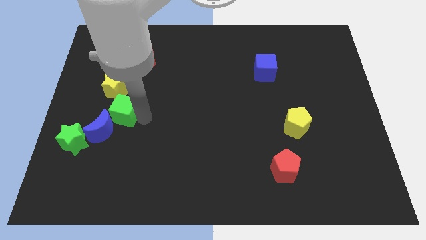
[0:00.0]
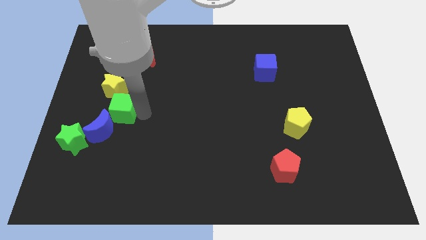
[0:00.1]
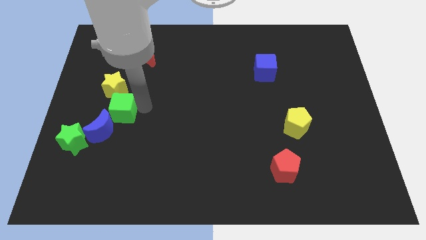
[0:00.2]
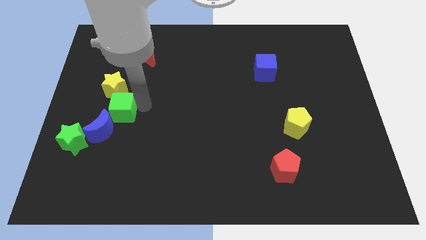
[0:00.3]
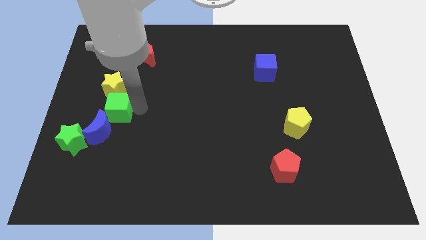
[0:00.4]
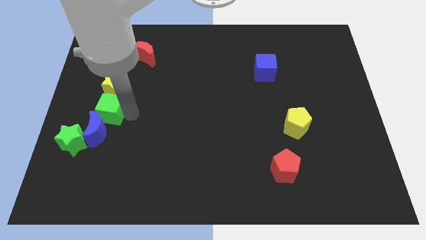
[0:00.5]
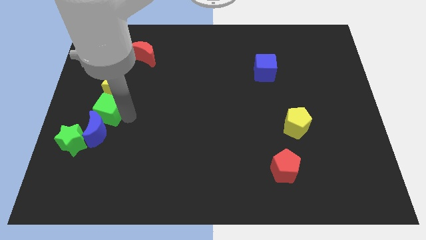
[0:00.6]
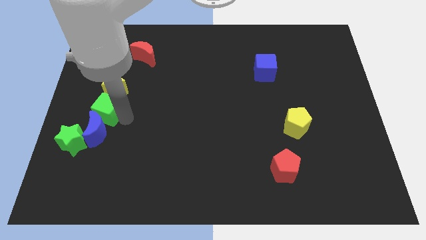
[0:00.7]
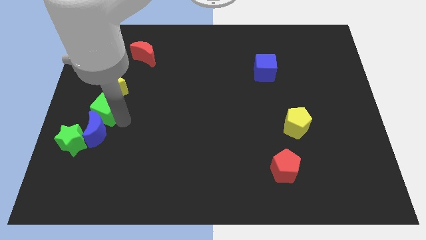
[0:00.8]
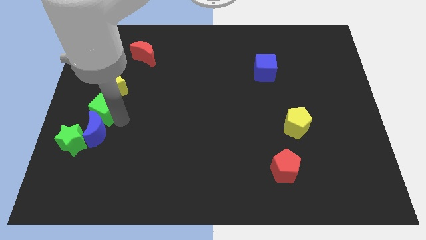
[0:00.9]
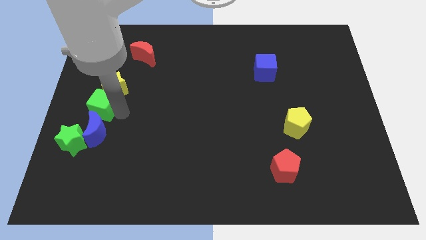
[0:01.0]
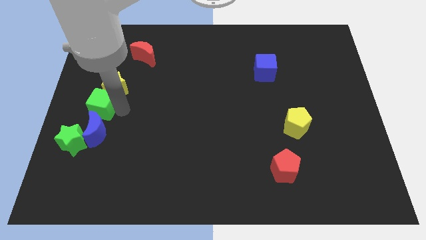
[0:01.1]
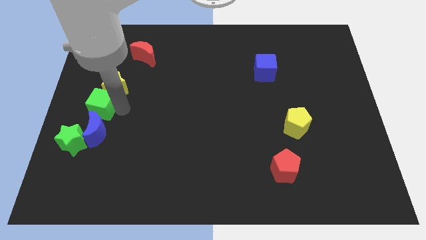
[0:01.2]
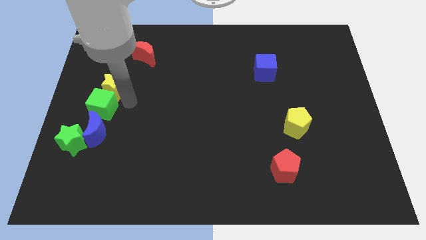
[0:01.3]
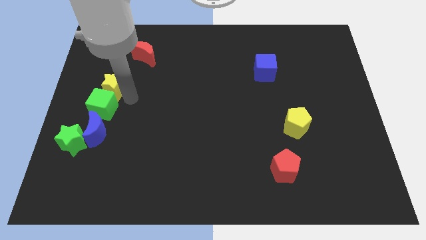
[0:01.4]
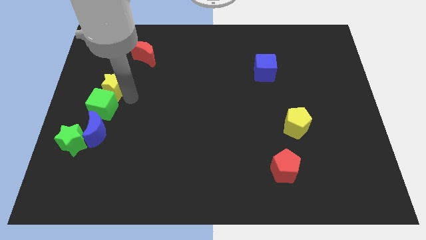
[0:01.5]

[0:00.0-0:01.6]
push the green cube to the bottom left side of the yellow star

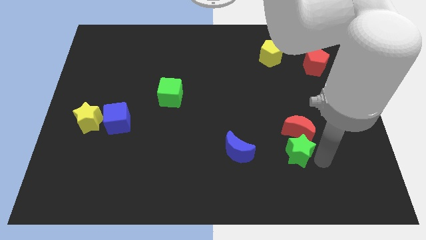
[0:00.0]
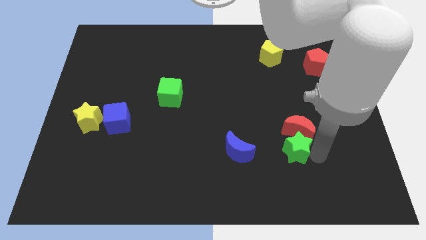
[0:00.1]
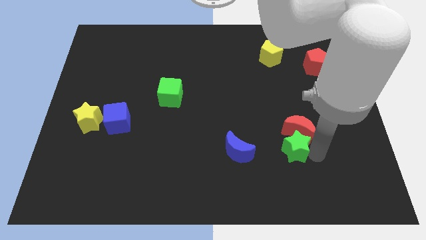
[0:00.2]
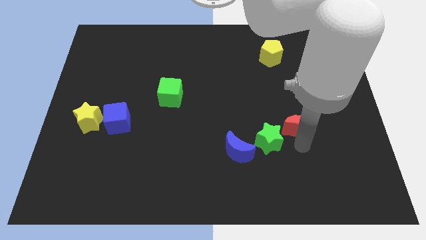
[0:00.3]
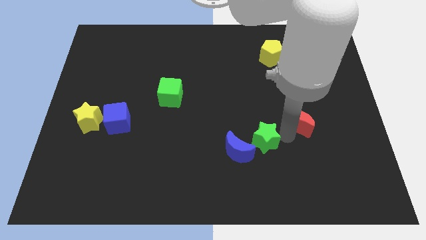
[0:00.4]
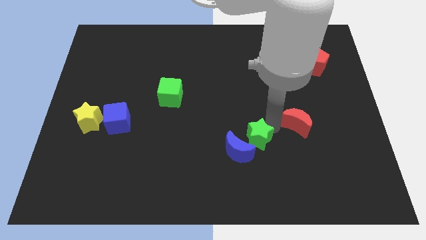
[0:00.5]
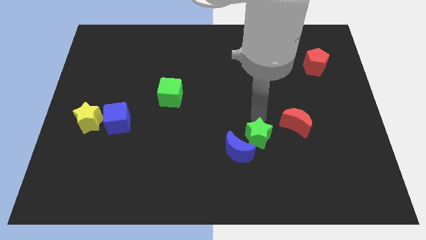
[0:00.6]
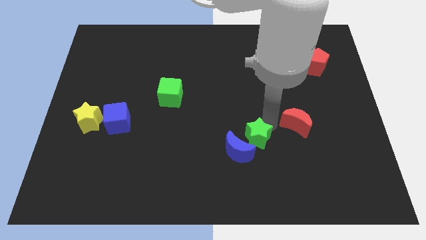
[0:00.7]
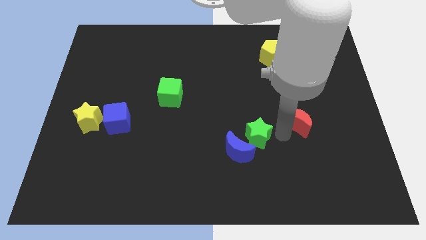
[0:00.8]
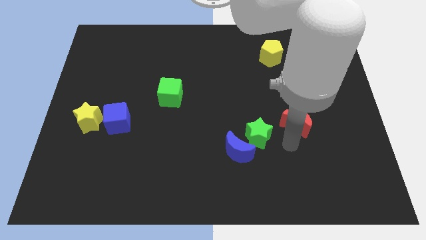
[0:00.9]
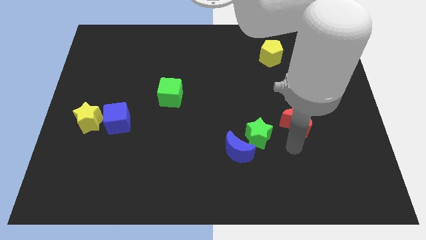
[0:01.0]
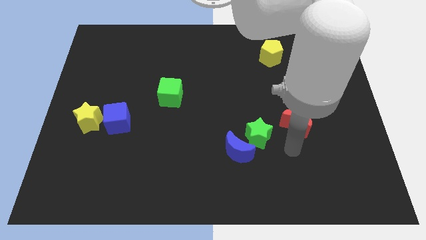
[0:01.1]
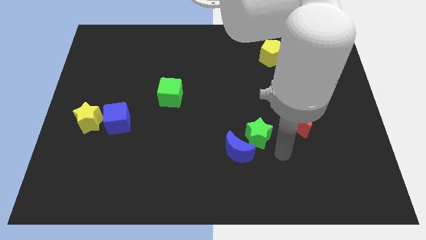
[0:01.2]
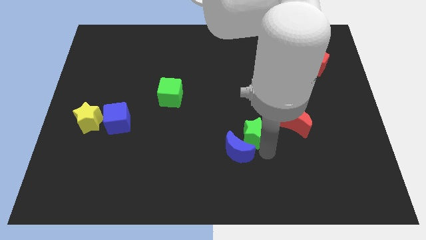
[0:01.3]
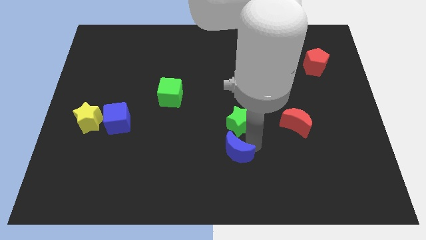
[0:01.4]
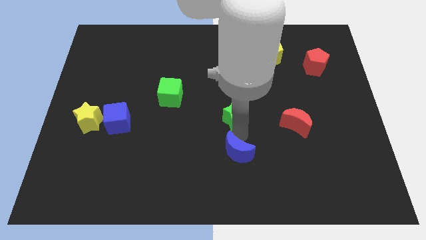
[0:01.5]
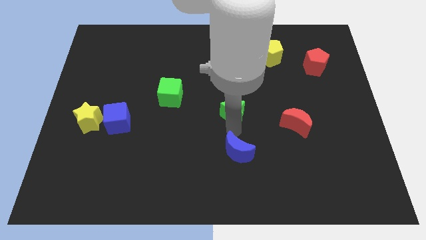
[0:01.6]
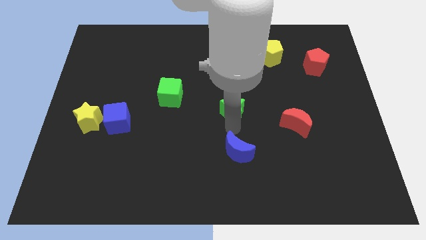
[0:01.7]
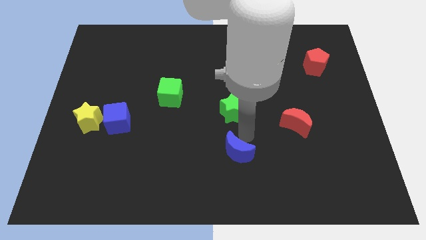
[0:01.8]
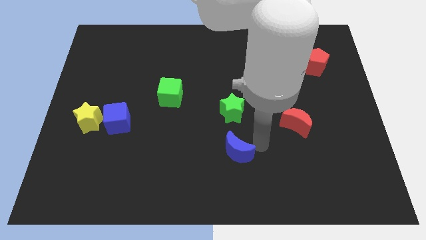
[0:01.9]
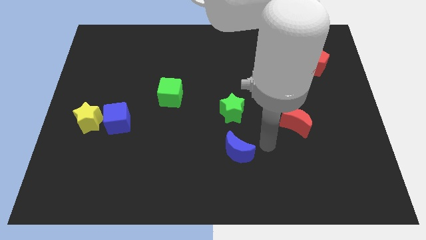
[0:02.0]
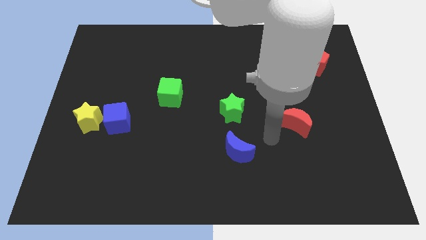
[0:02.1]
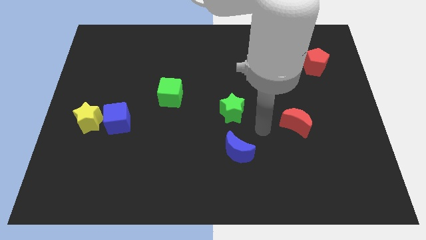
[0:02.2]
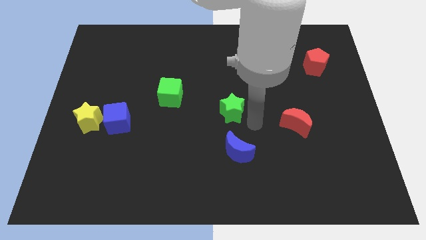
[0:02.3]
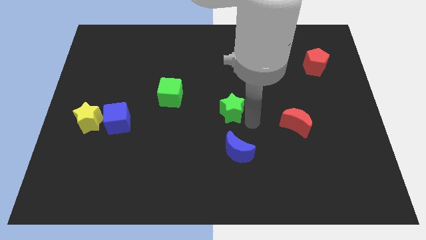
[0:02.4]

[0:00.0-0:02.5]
push green star above blue crescent

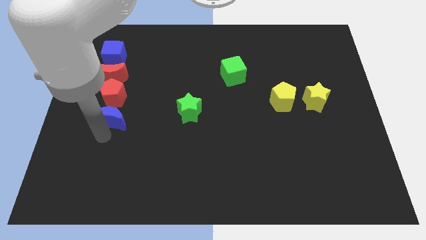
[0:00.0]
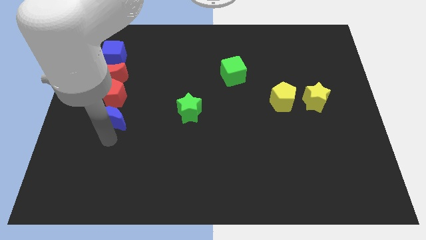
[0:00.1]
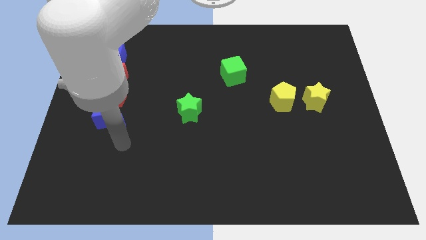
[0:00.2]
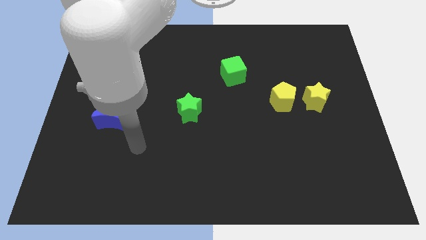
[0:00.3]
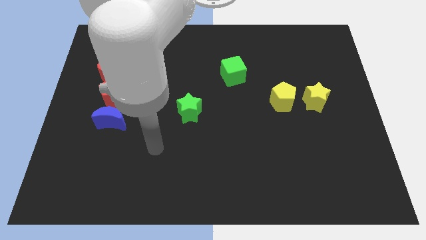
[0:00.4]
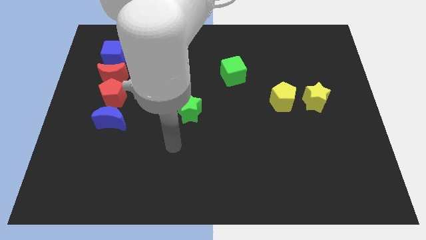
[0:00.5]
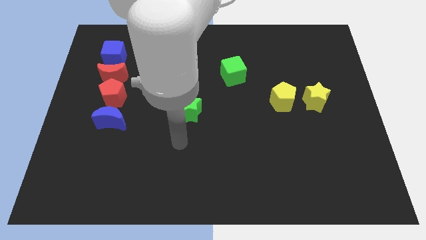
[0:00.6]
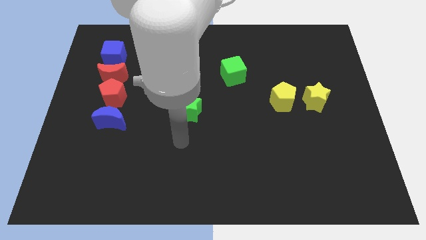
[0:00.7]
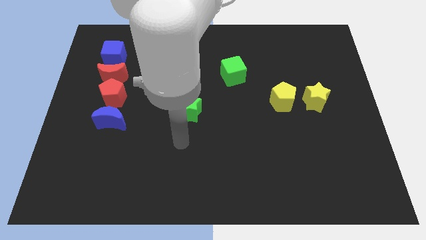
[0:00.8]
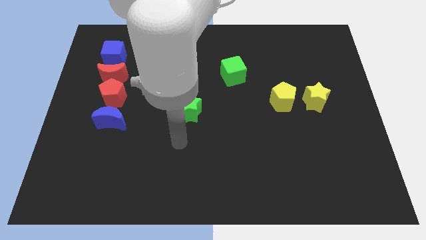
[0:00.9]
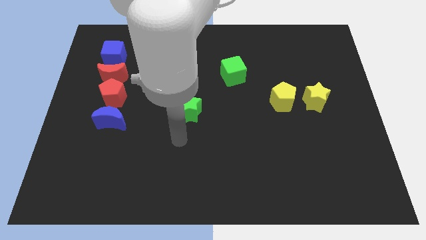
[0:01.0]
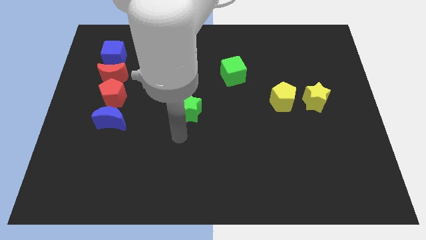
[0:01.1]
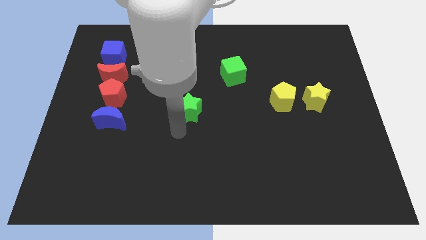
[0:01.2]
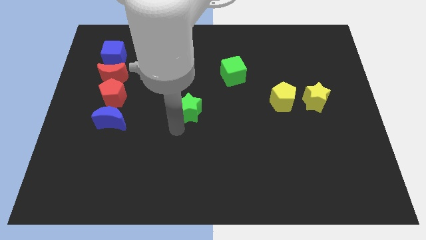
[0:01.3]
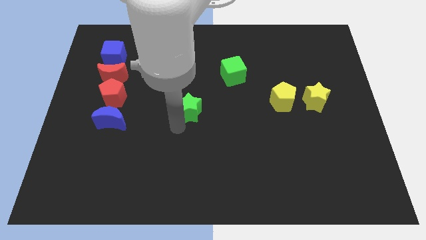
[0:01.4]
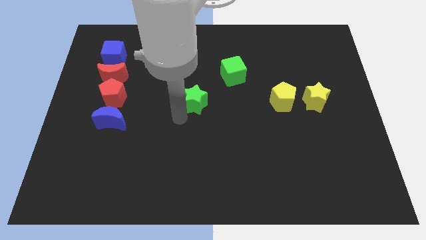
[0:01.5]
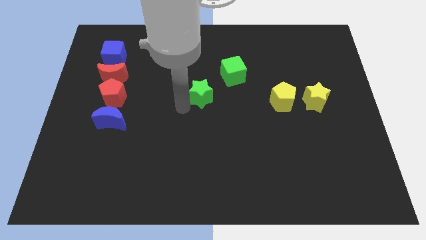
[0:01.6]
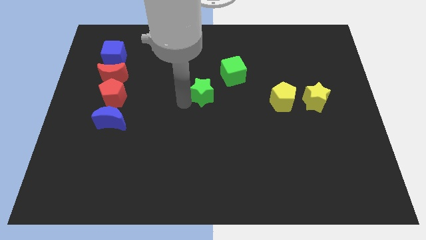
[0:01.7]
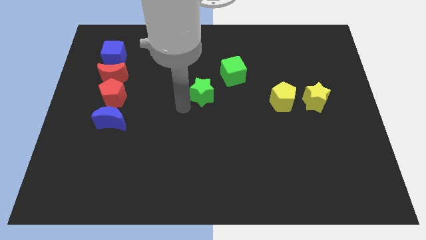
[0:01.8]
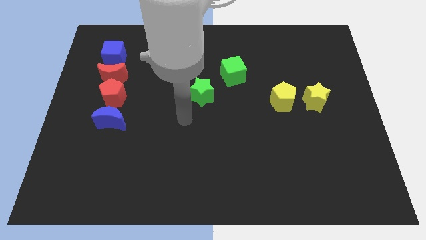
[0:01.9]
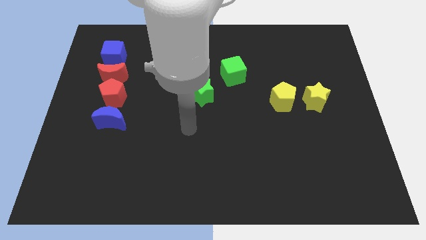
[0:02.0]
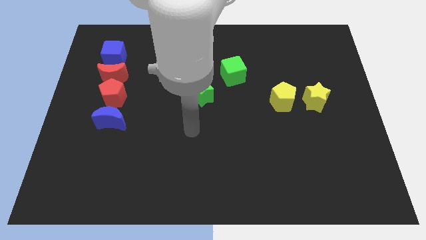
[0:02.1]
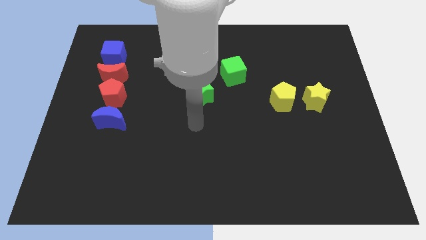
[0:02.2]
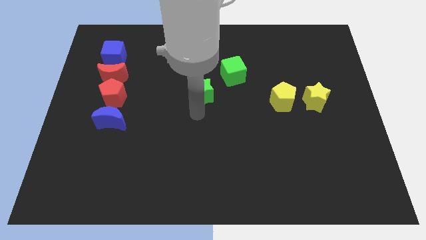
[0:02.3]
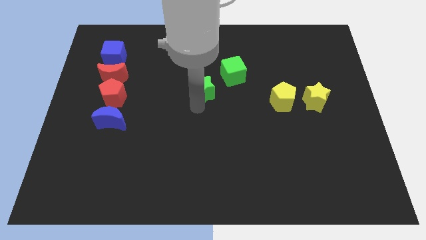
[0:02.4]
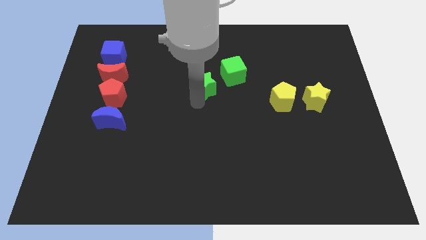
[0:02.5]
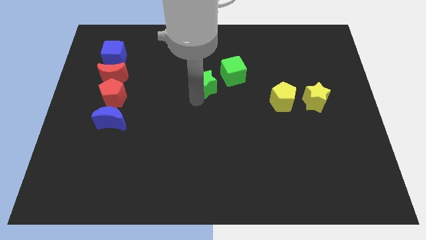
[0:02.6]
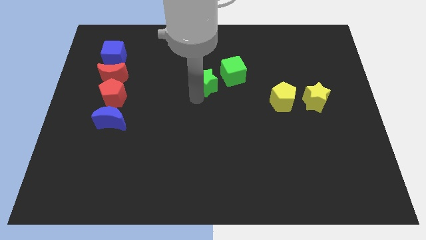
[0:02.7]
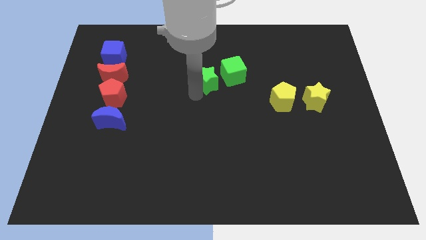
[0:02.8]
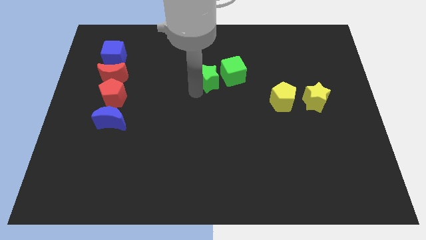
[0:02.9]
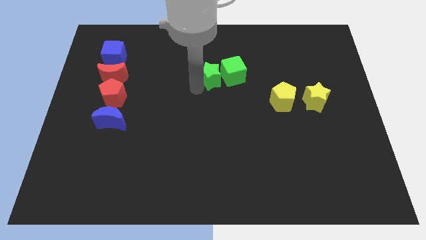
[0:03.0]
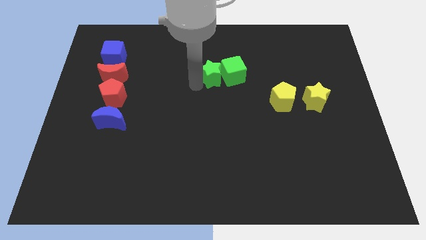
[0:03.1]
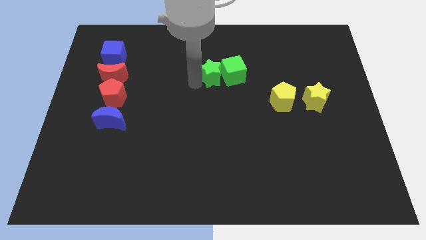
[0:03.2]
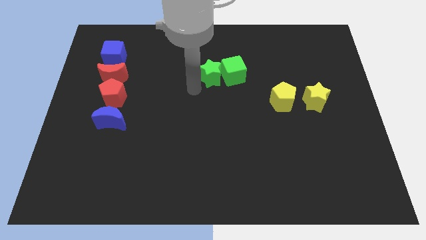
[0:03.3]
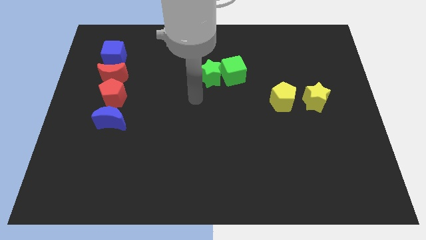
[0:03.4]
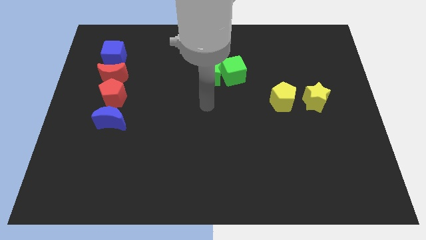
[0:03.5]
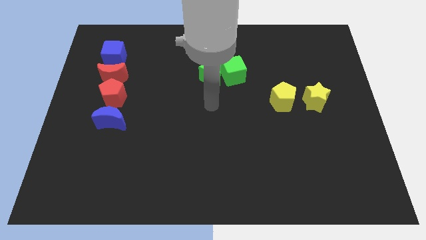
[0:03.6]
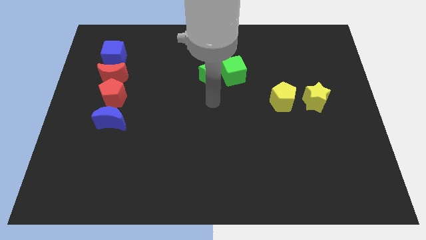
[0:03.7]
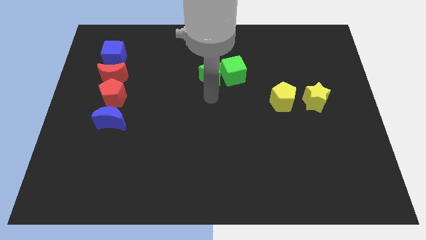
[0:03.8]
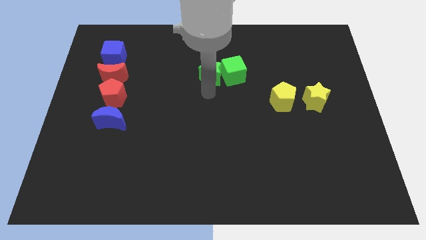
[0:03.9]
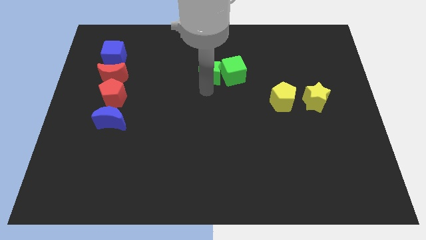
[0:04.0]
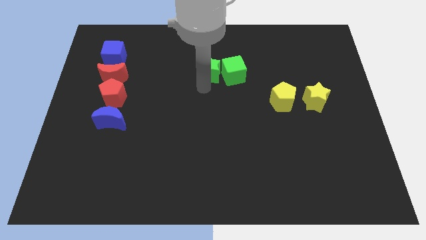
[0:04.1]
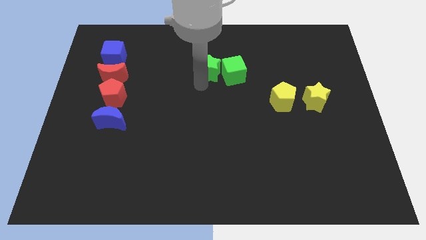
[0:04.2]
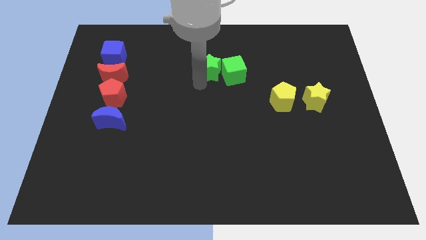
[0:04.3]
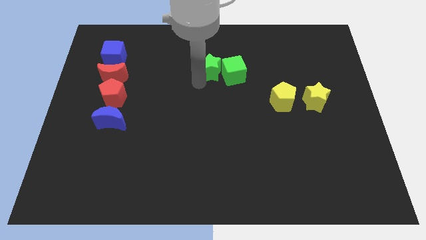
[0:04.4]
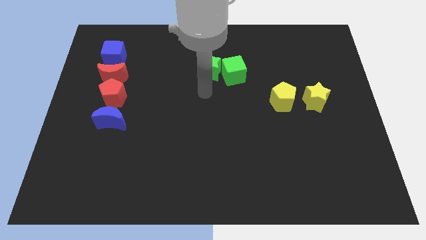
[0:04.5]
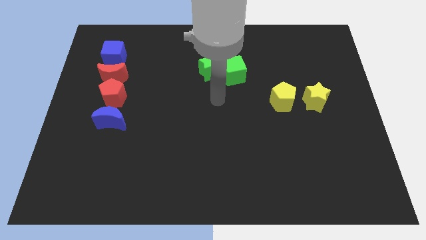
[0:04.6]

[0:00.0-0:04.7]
push the green star upward
